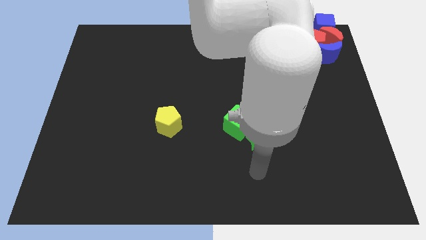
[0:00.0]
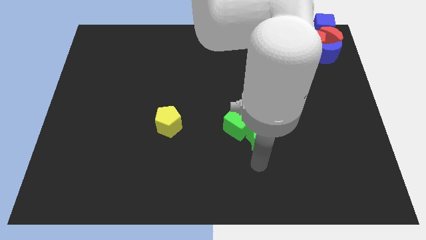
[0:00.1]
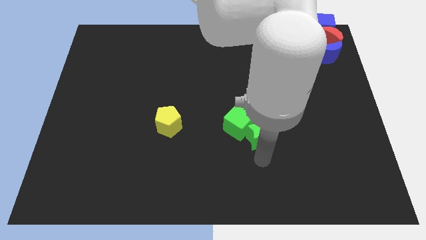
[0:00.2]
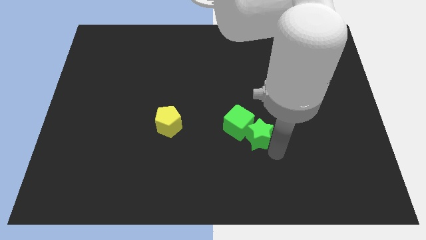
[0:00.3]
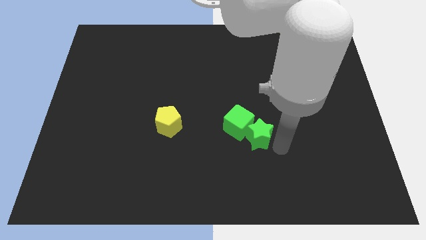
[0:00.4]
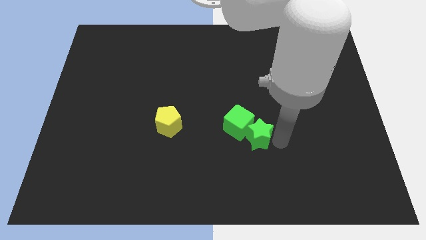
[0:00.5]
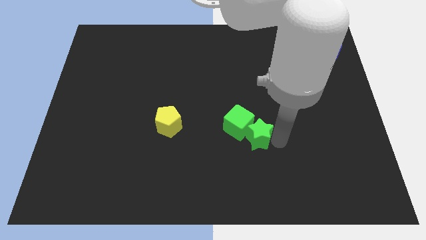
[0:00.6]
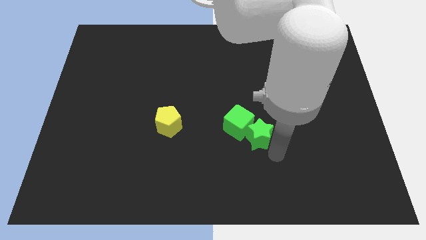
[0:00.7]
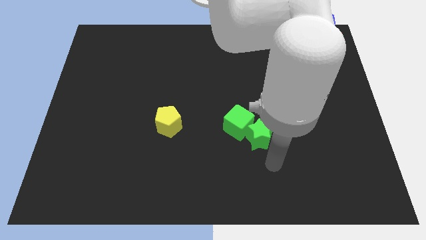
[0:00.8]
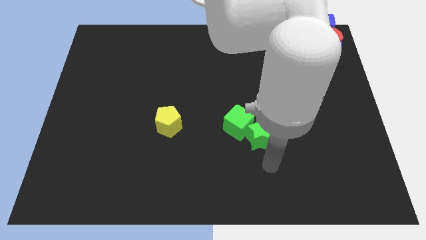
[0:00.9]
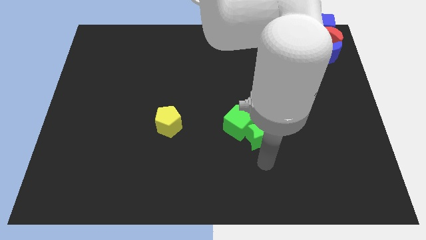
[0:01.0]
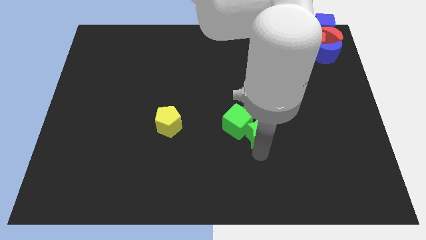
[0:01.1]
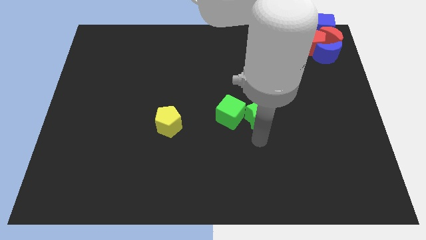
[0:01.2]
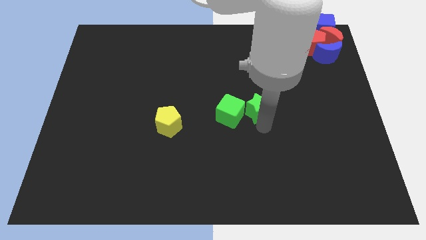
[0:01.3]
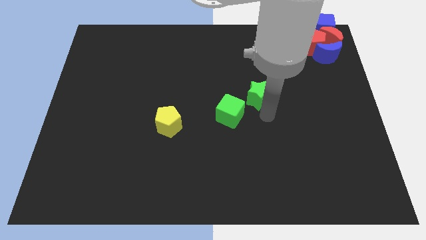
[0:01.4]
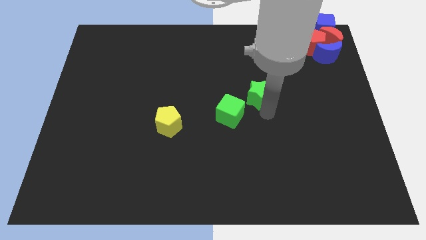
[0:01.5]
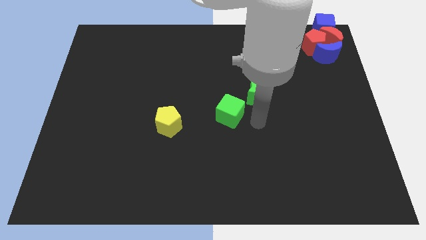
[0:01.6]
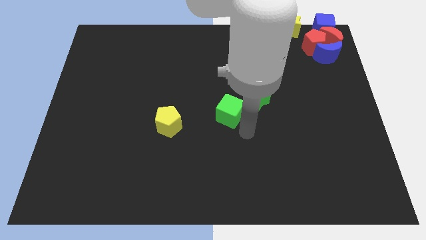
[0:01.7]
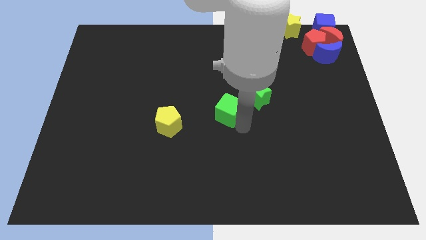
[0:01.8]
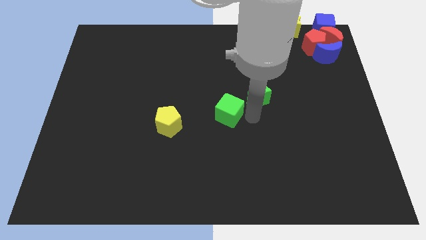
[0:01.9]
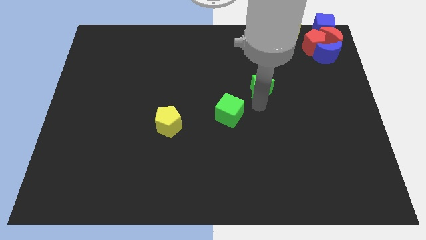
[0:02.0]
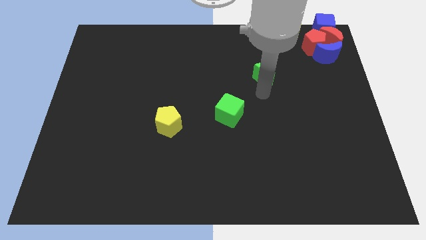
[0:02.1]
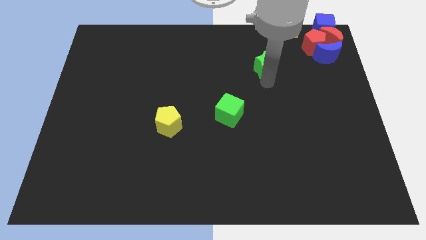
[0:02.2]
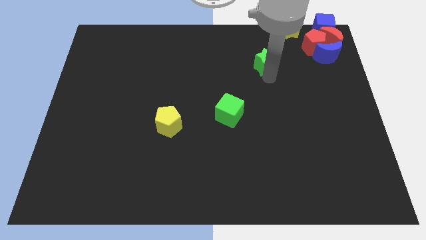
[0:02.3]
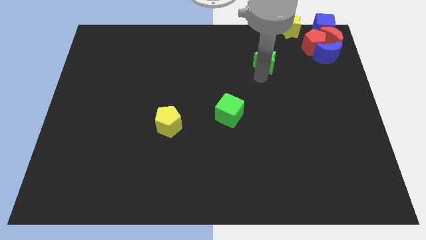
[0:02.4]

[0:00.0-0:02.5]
drag the green star diagonal to the green cube

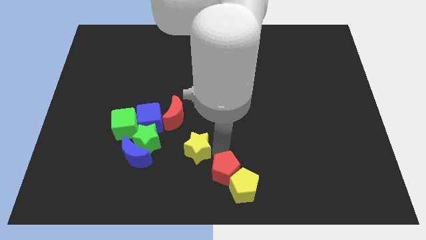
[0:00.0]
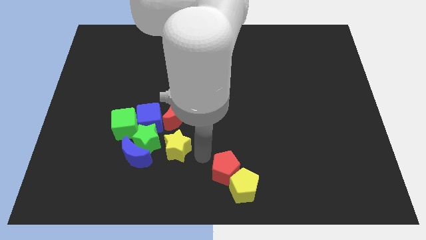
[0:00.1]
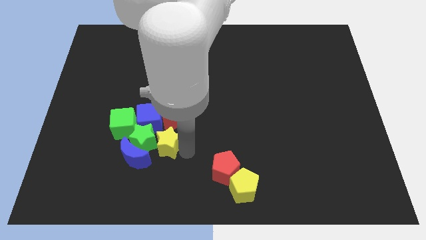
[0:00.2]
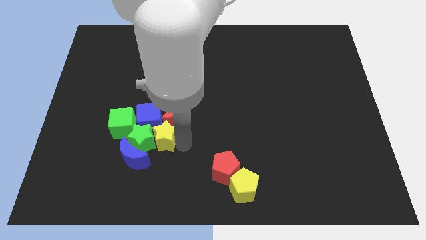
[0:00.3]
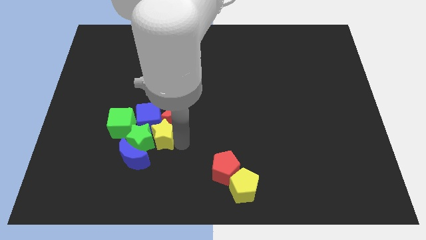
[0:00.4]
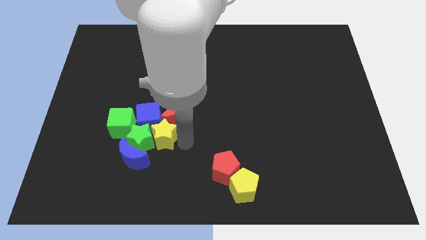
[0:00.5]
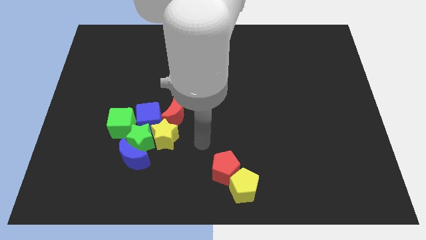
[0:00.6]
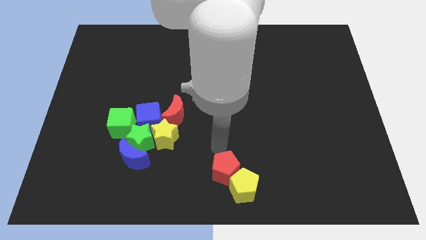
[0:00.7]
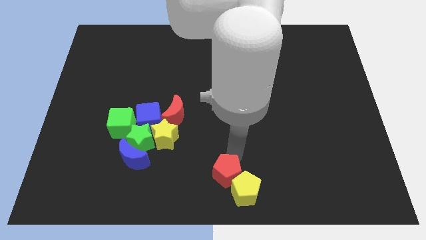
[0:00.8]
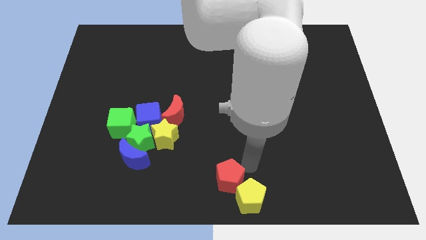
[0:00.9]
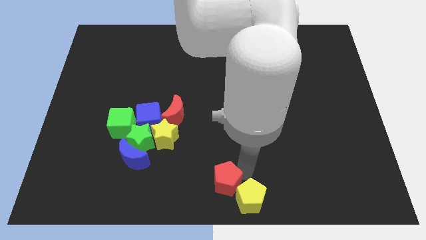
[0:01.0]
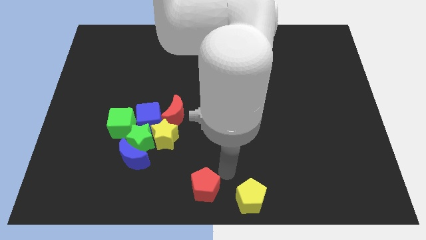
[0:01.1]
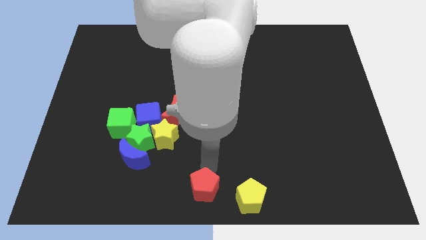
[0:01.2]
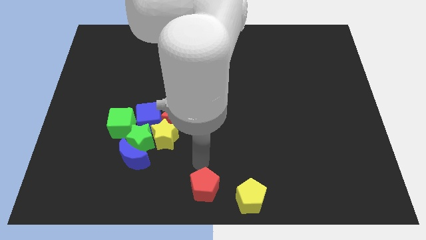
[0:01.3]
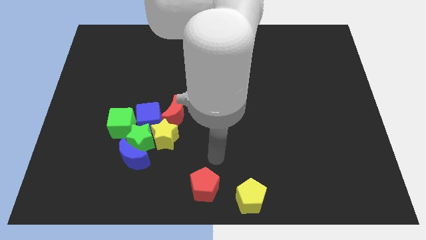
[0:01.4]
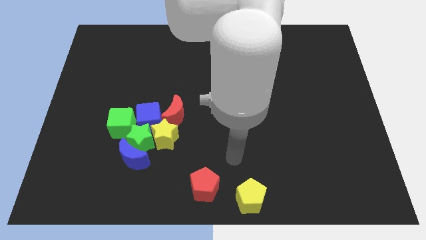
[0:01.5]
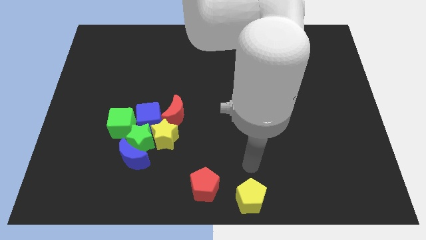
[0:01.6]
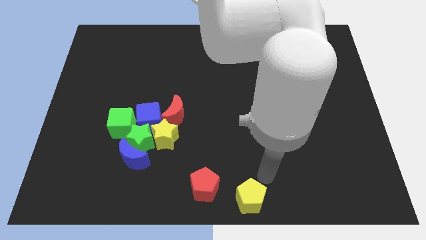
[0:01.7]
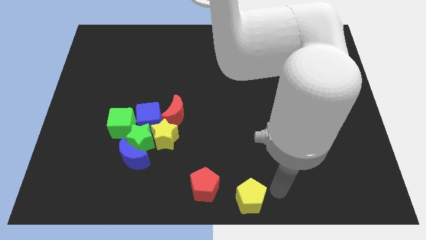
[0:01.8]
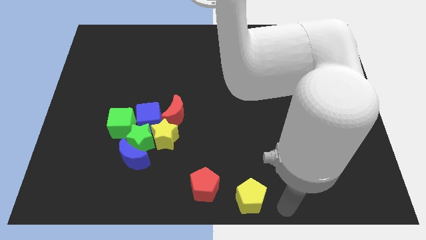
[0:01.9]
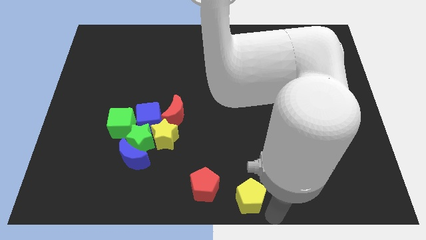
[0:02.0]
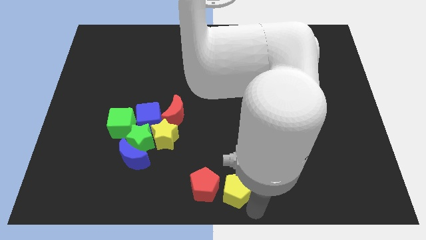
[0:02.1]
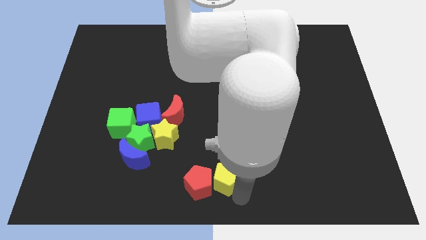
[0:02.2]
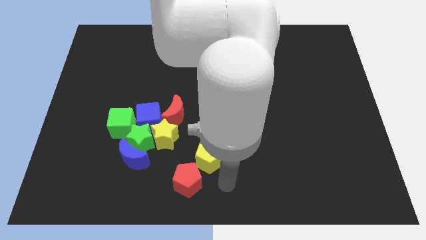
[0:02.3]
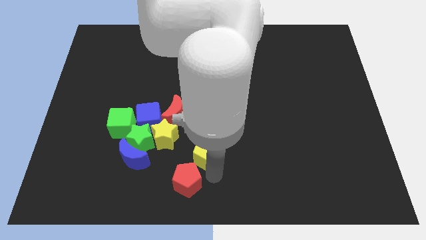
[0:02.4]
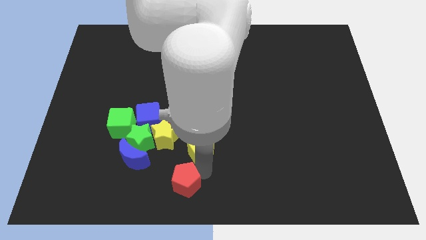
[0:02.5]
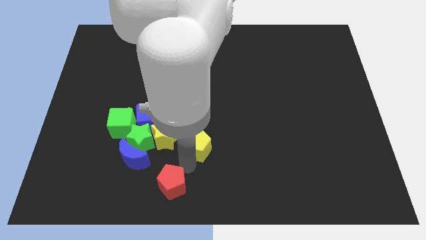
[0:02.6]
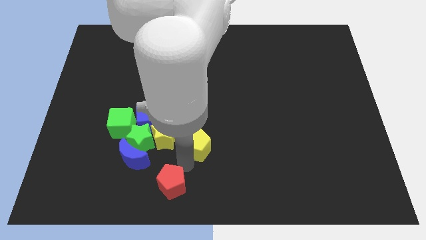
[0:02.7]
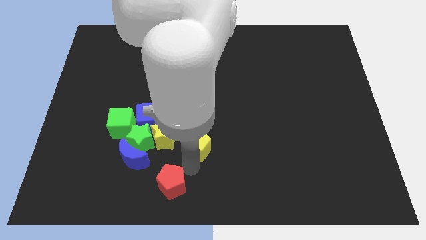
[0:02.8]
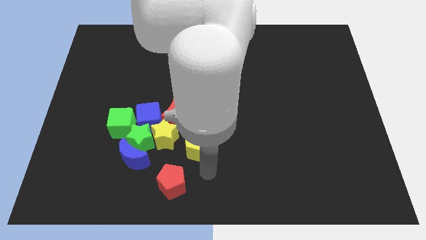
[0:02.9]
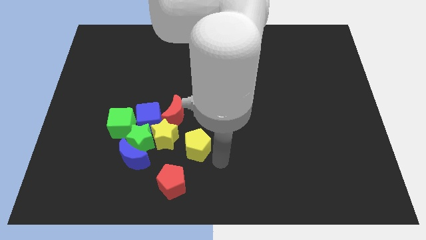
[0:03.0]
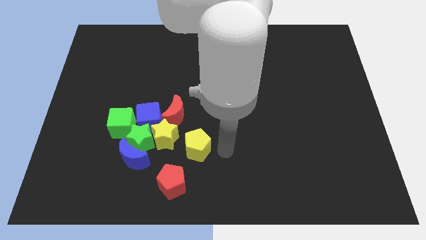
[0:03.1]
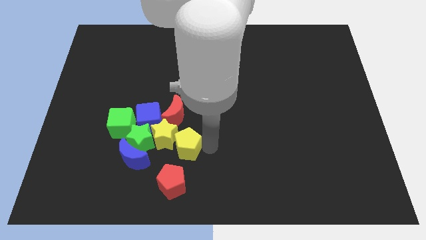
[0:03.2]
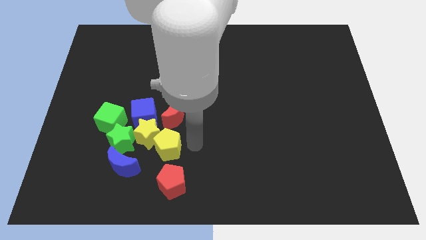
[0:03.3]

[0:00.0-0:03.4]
push the yellow pentagon into the yellow star

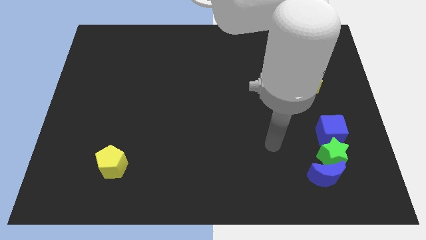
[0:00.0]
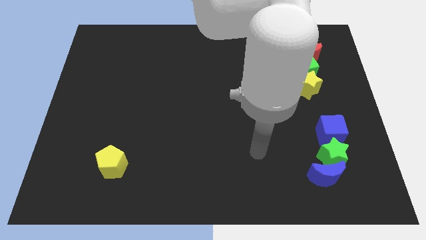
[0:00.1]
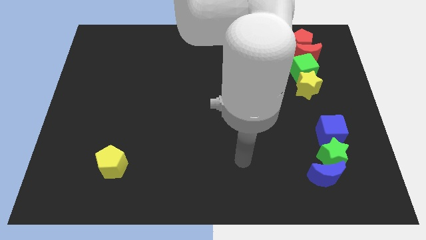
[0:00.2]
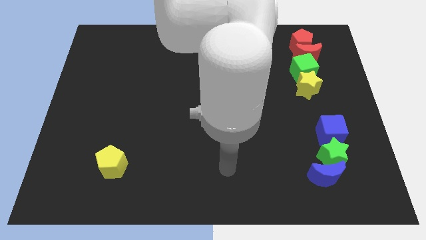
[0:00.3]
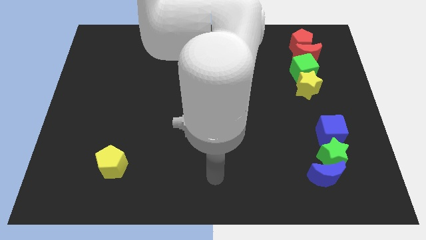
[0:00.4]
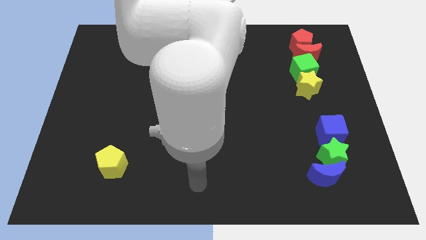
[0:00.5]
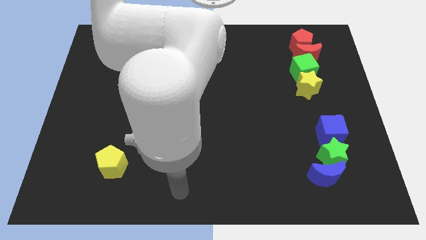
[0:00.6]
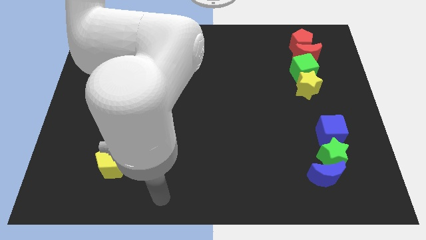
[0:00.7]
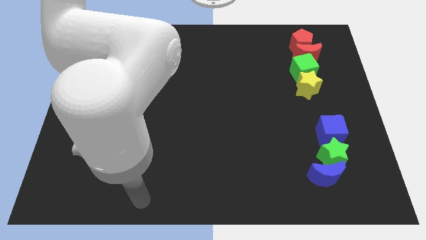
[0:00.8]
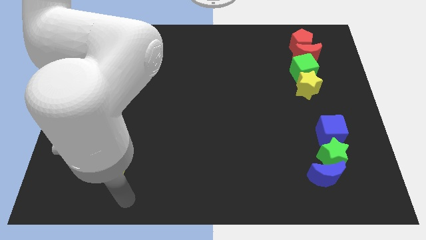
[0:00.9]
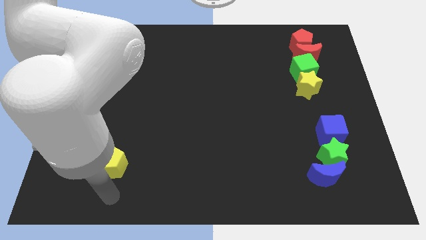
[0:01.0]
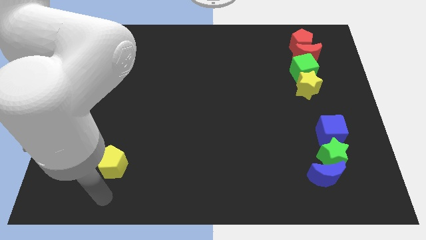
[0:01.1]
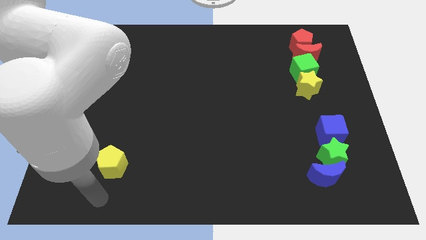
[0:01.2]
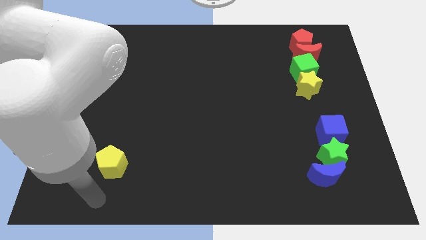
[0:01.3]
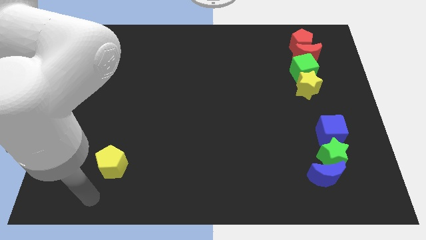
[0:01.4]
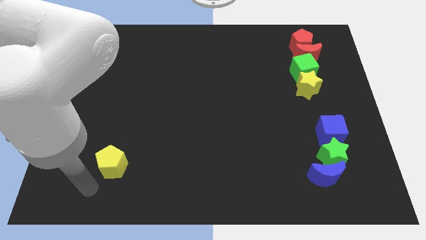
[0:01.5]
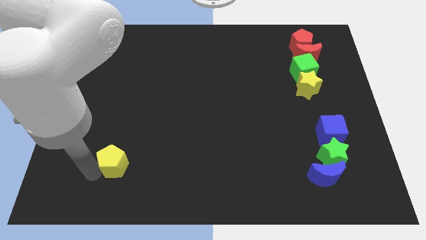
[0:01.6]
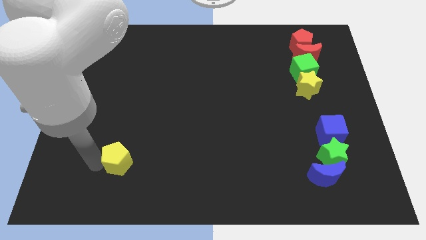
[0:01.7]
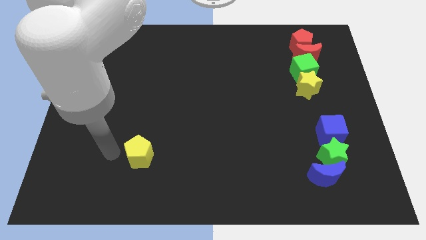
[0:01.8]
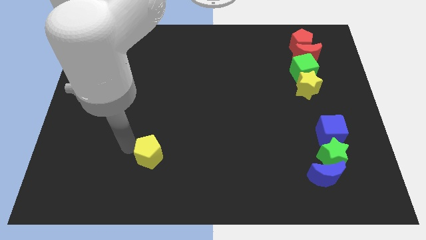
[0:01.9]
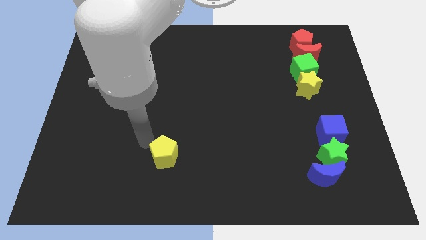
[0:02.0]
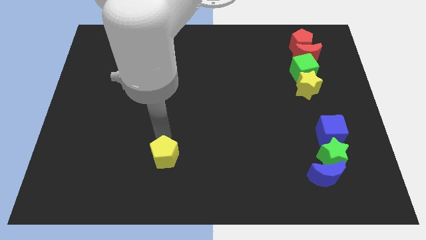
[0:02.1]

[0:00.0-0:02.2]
move the yellow pentagon towards the right

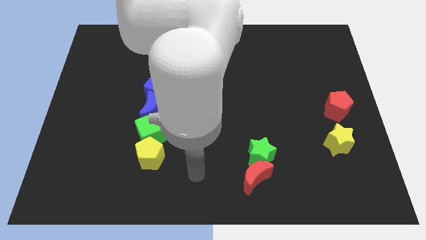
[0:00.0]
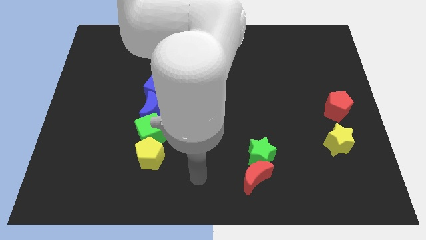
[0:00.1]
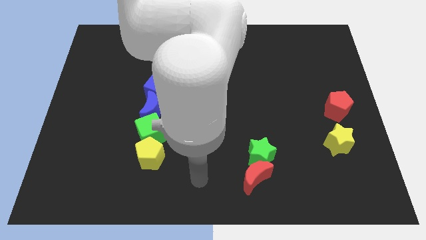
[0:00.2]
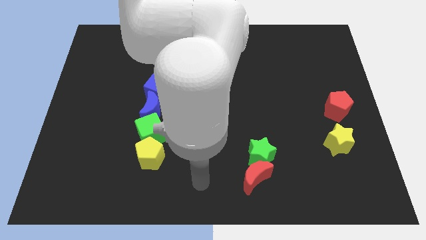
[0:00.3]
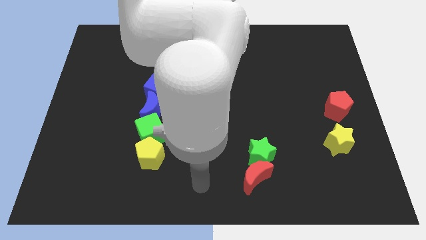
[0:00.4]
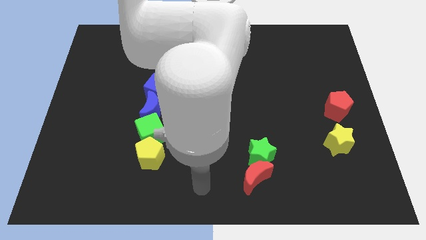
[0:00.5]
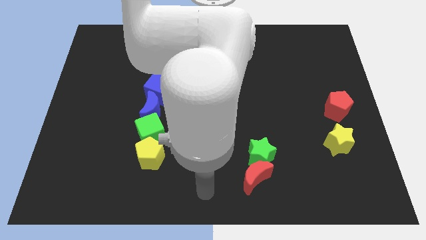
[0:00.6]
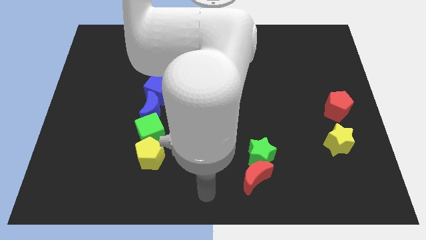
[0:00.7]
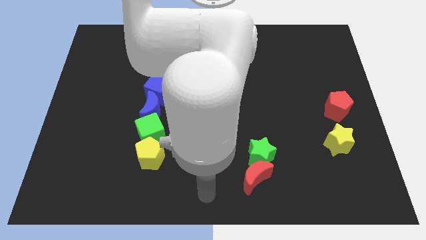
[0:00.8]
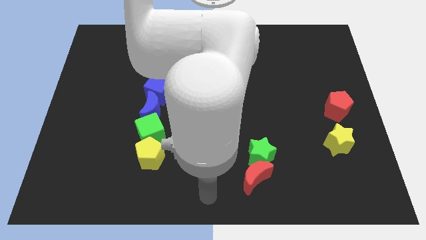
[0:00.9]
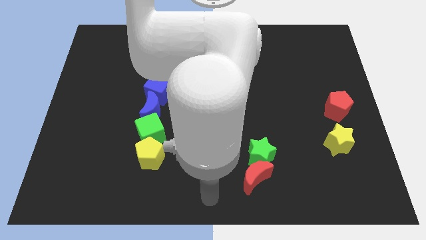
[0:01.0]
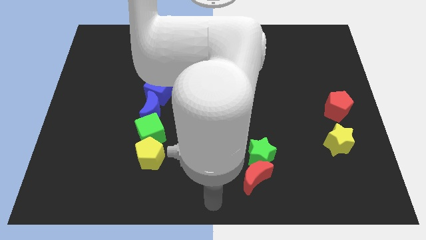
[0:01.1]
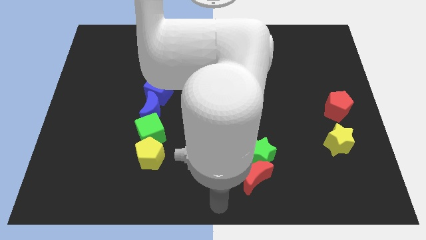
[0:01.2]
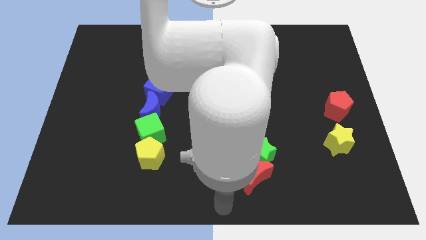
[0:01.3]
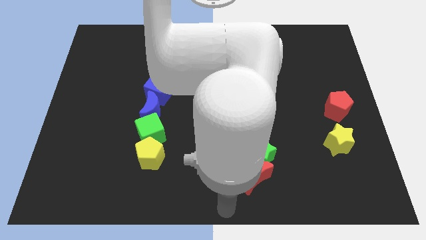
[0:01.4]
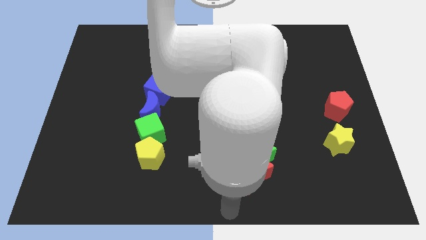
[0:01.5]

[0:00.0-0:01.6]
point your arm at the bottom center of the board
